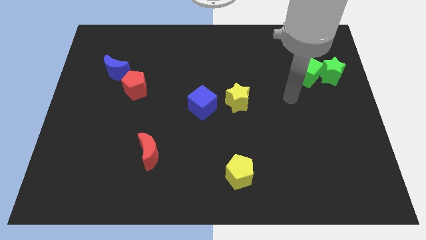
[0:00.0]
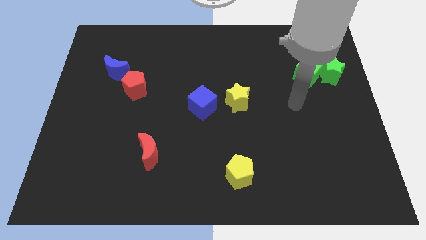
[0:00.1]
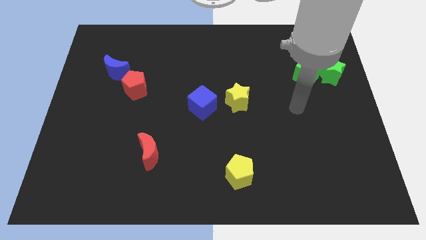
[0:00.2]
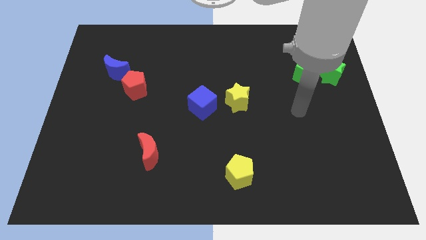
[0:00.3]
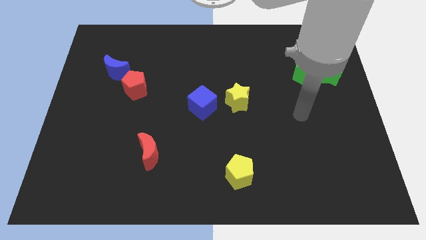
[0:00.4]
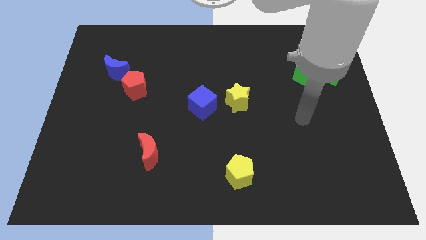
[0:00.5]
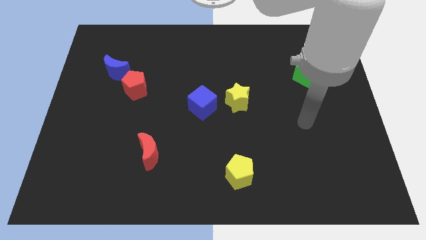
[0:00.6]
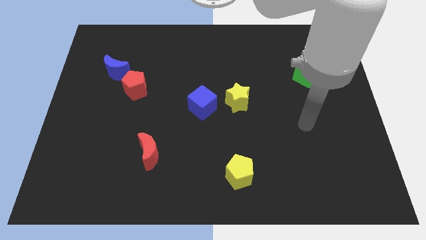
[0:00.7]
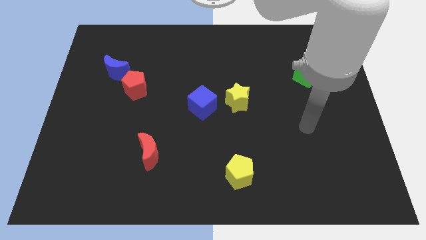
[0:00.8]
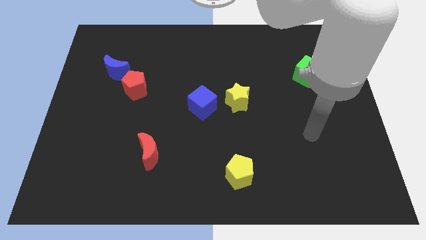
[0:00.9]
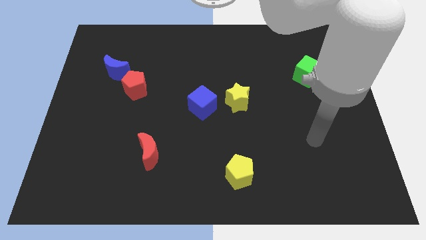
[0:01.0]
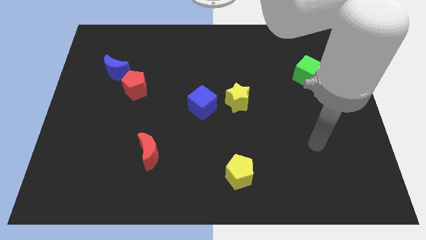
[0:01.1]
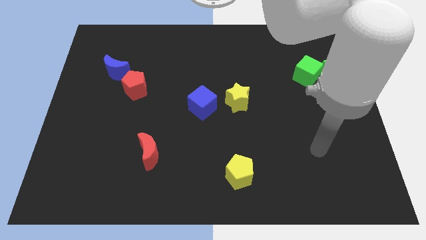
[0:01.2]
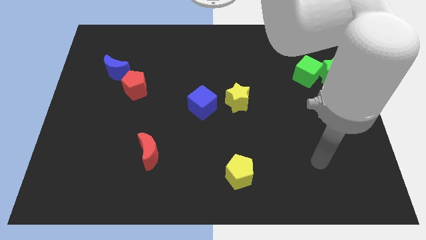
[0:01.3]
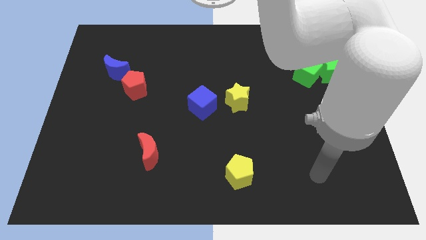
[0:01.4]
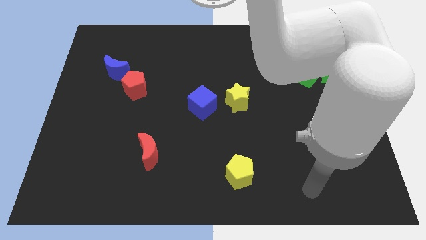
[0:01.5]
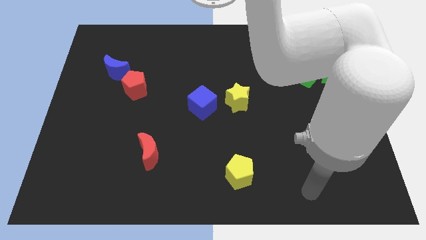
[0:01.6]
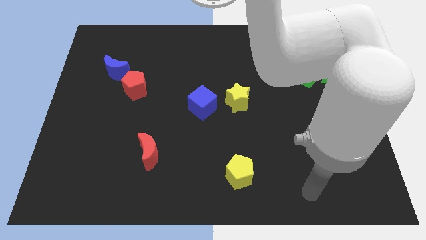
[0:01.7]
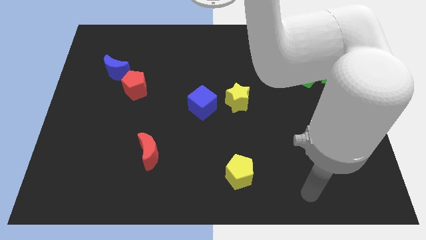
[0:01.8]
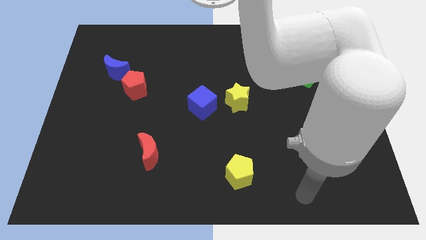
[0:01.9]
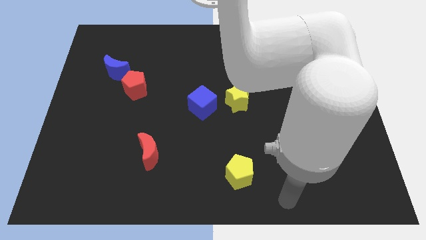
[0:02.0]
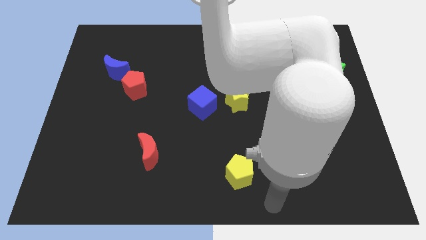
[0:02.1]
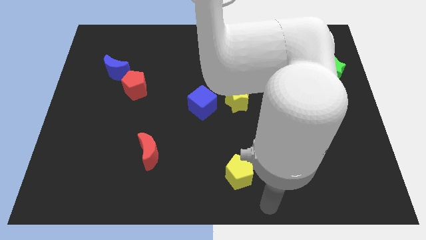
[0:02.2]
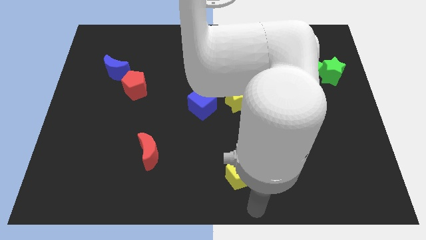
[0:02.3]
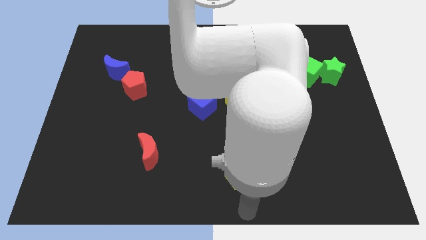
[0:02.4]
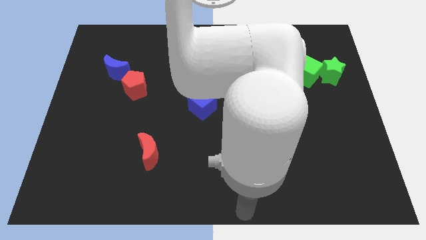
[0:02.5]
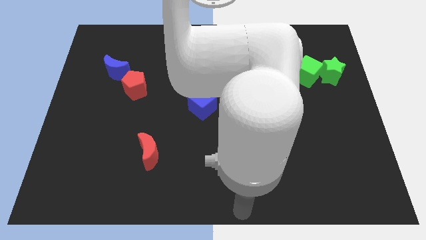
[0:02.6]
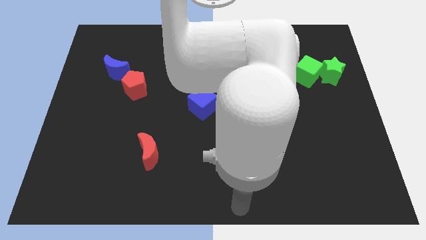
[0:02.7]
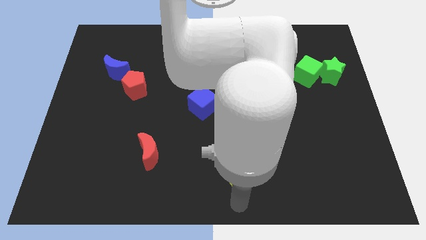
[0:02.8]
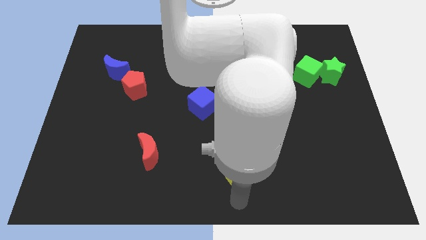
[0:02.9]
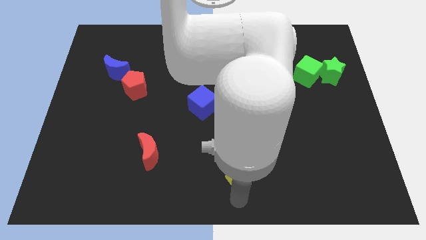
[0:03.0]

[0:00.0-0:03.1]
move the arm to the below of the yellow pentagon

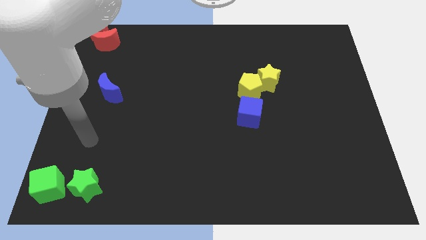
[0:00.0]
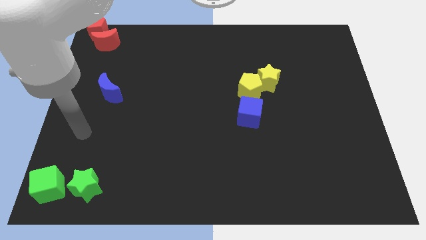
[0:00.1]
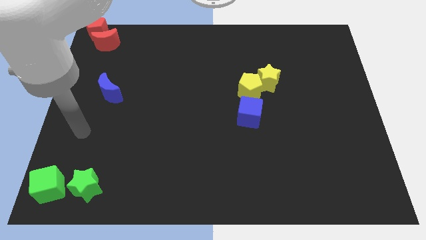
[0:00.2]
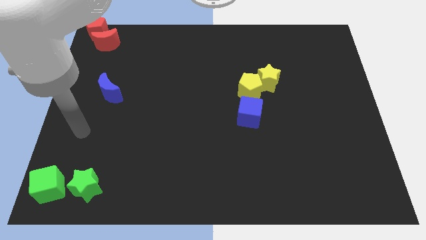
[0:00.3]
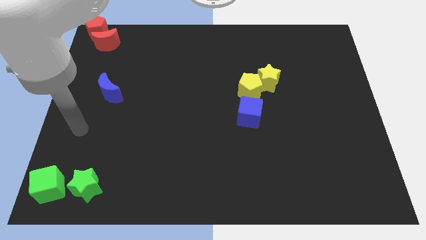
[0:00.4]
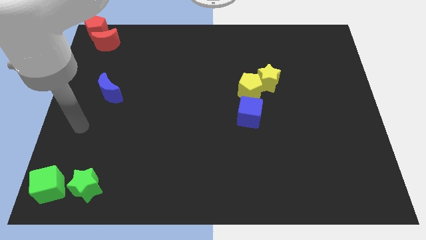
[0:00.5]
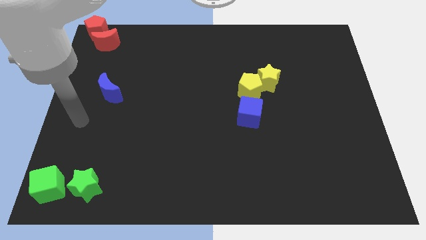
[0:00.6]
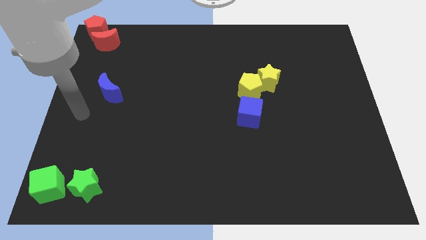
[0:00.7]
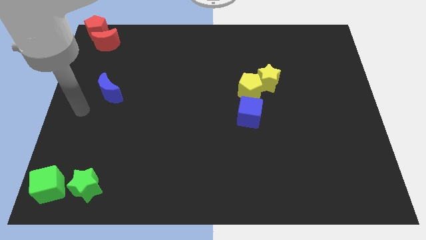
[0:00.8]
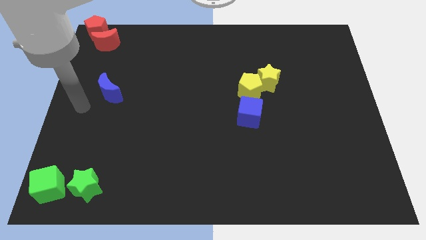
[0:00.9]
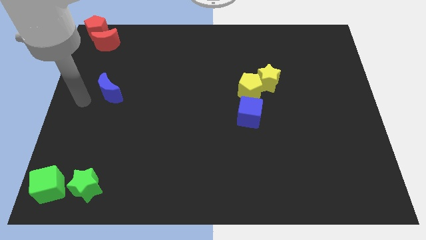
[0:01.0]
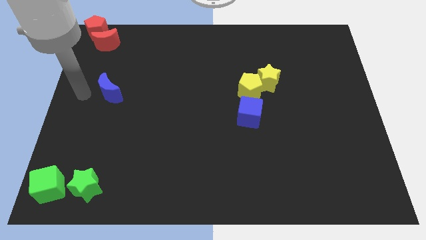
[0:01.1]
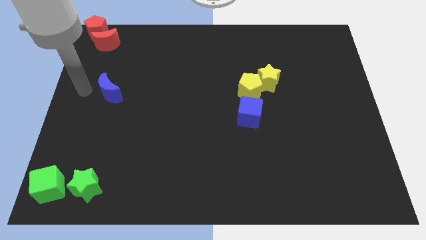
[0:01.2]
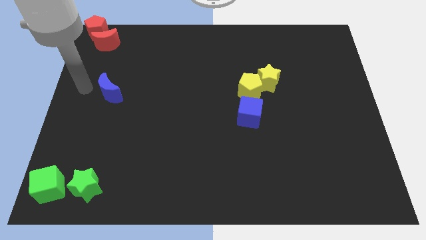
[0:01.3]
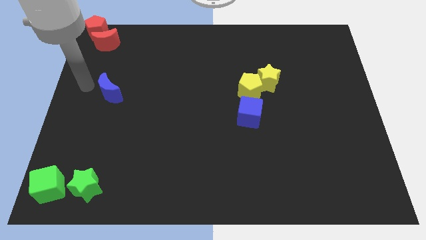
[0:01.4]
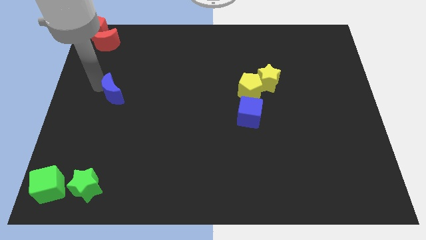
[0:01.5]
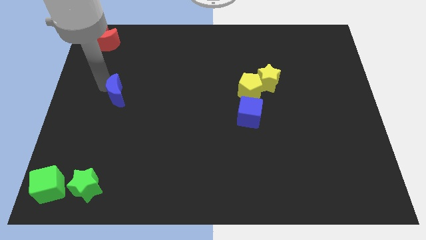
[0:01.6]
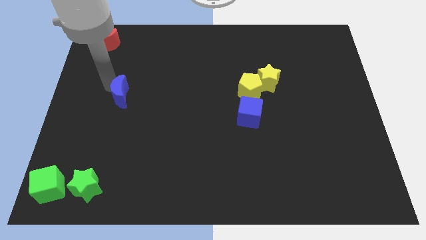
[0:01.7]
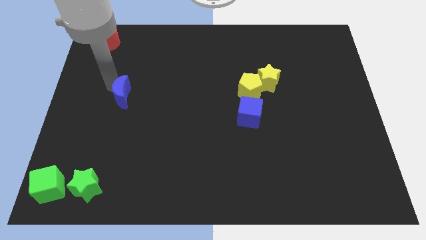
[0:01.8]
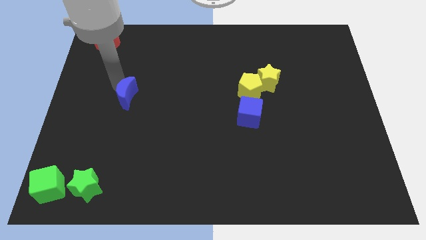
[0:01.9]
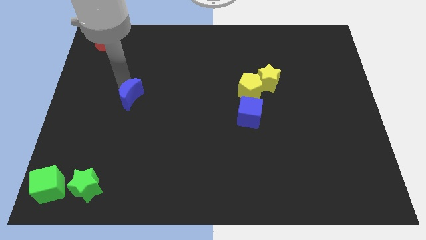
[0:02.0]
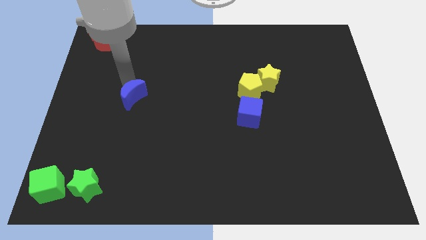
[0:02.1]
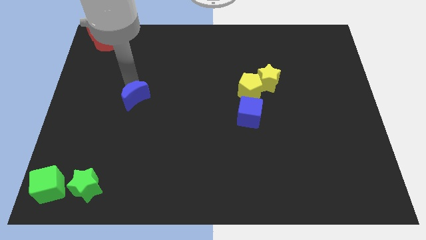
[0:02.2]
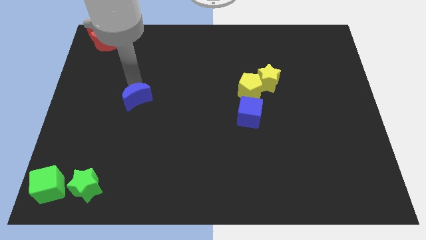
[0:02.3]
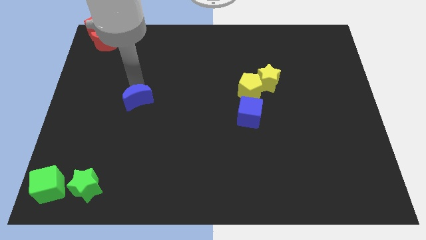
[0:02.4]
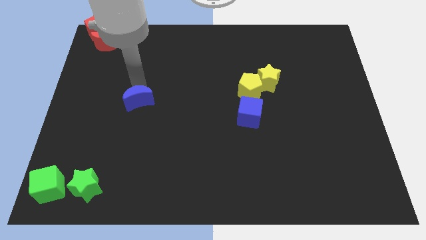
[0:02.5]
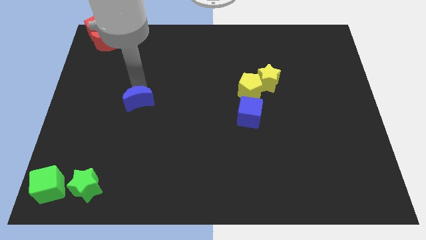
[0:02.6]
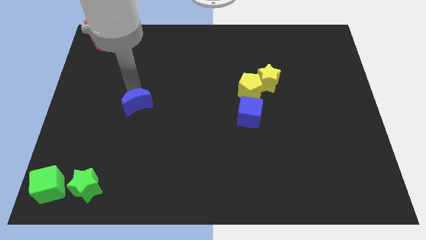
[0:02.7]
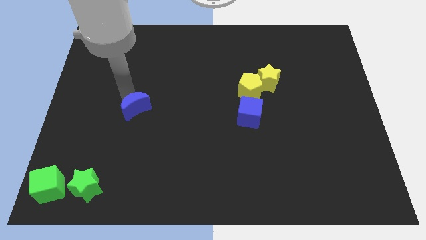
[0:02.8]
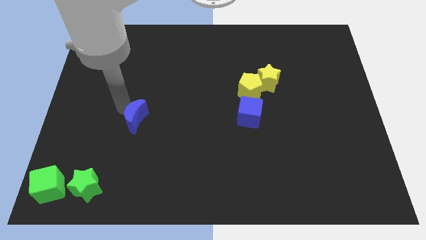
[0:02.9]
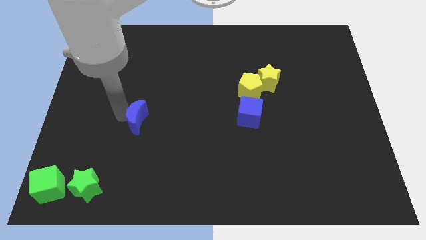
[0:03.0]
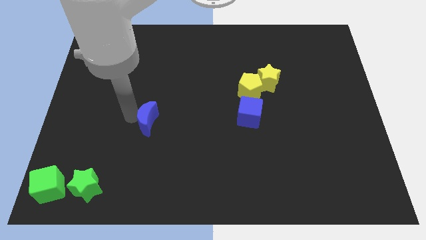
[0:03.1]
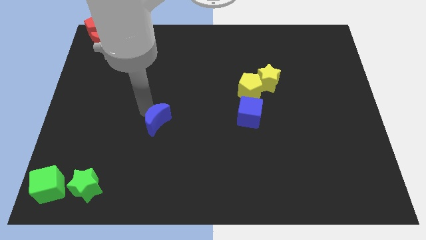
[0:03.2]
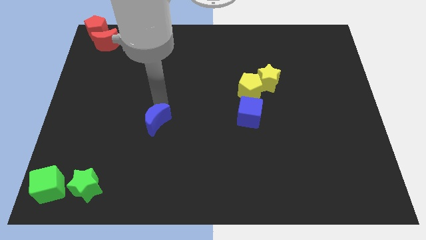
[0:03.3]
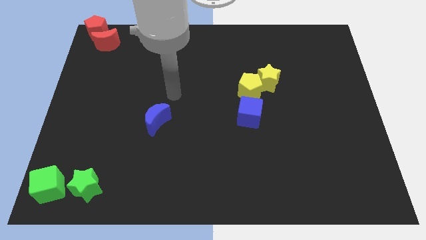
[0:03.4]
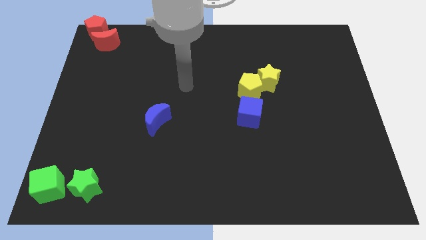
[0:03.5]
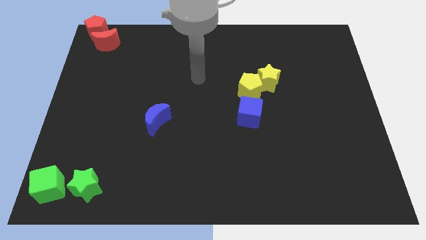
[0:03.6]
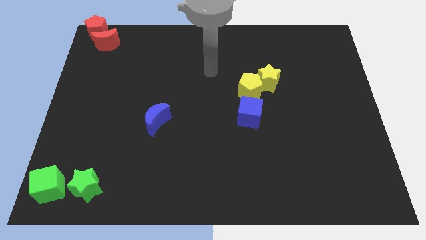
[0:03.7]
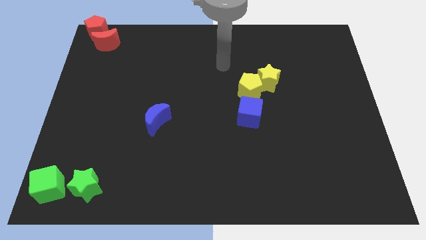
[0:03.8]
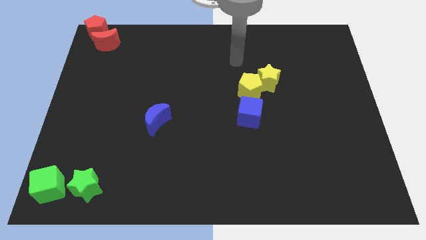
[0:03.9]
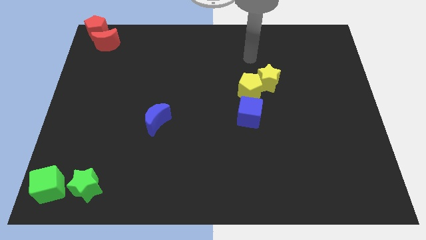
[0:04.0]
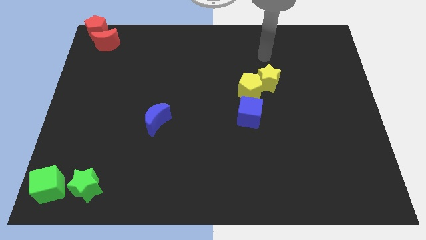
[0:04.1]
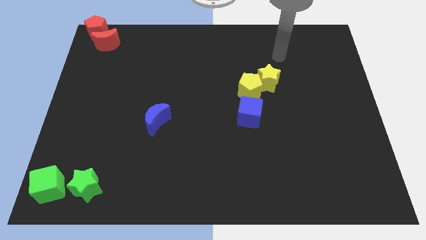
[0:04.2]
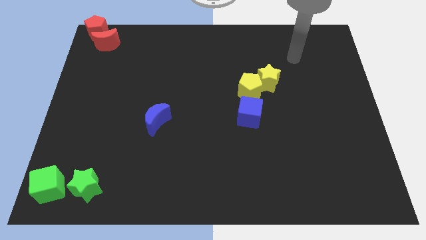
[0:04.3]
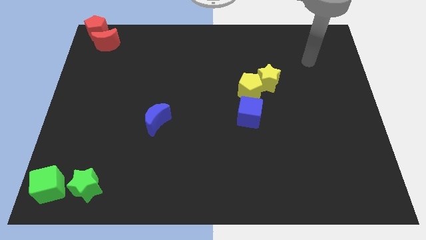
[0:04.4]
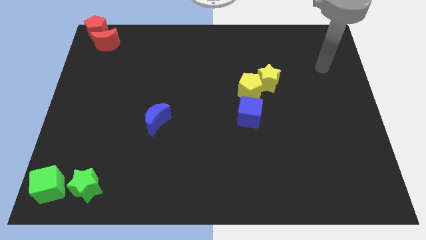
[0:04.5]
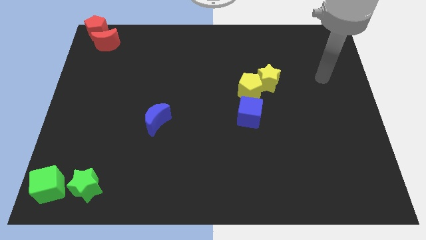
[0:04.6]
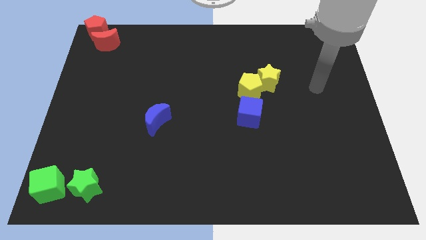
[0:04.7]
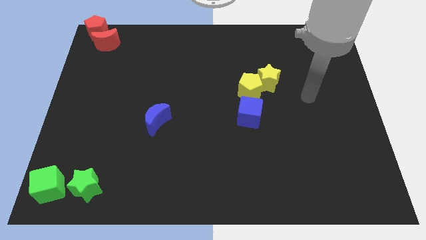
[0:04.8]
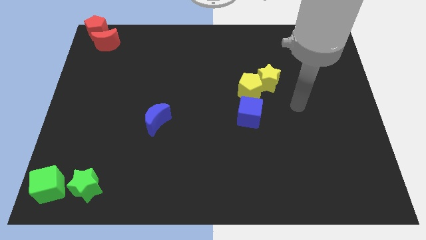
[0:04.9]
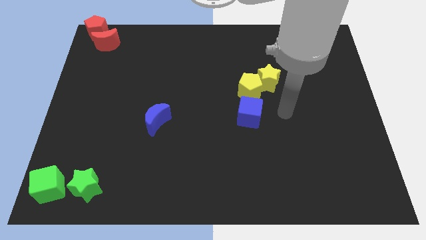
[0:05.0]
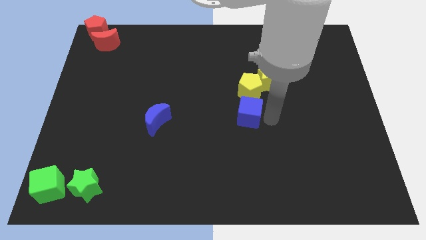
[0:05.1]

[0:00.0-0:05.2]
move the blue moon slightly to the right side of the board

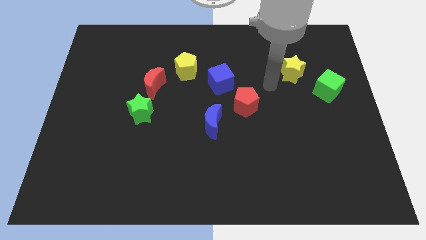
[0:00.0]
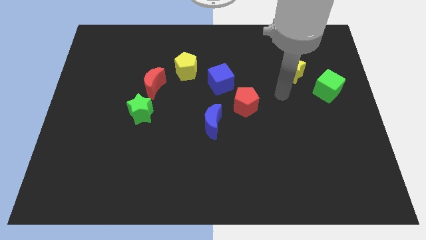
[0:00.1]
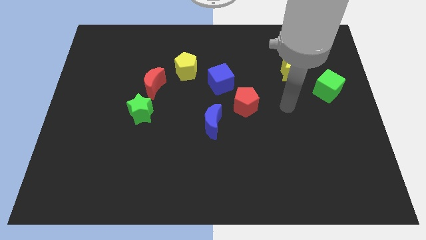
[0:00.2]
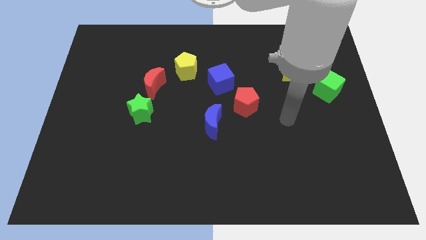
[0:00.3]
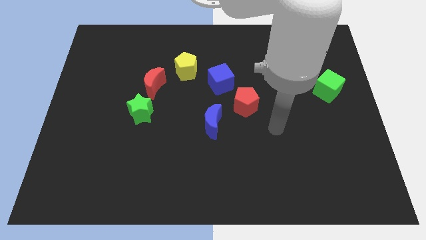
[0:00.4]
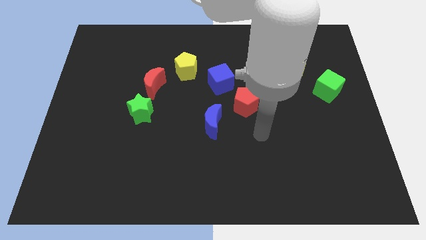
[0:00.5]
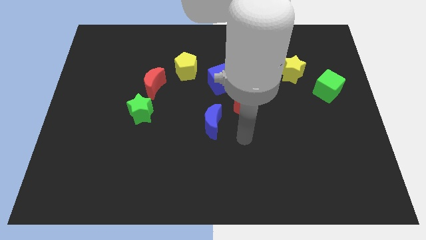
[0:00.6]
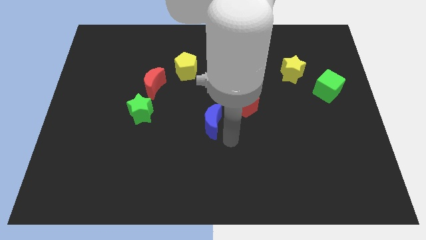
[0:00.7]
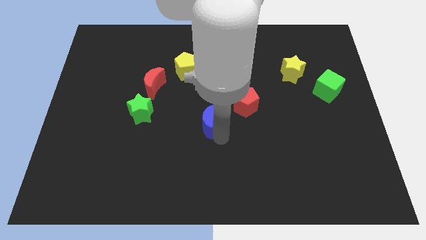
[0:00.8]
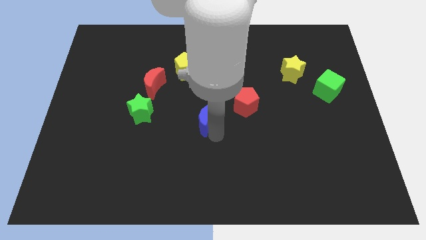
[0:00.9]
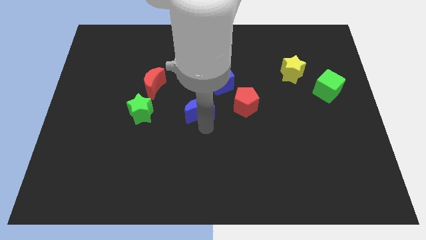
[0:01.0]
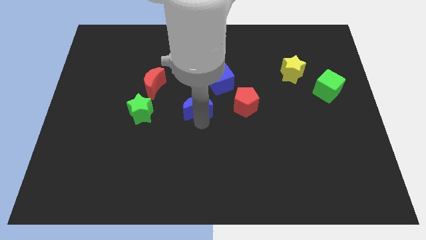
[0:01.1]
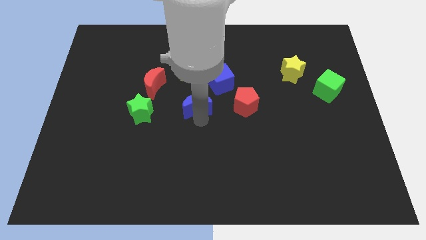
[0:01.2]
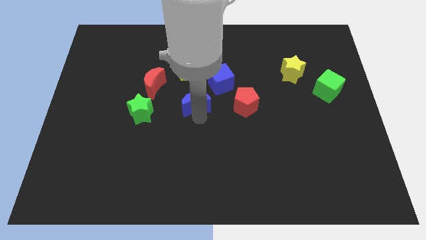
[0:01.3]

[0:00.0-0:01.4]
push the blue crescent to the left of the red pentagon
